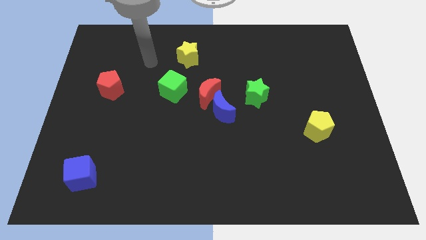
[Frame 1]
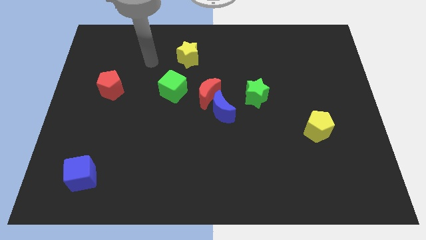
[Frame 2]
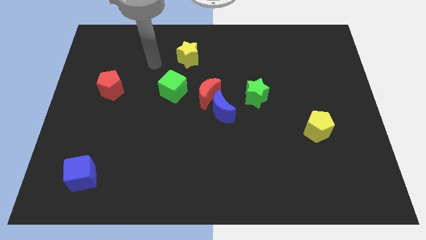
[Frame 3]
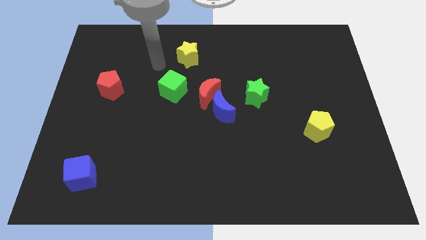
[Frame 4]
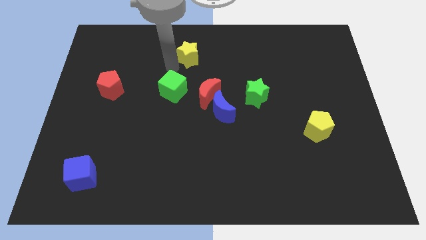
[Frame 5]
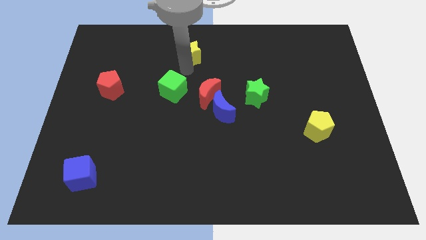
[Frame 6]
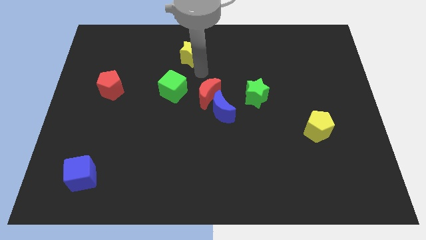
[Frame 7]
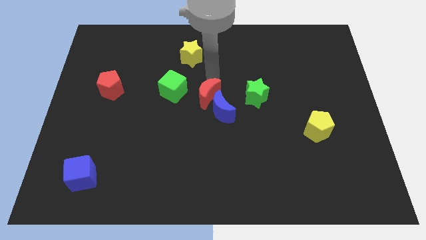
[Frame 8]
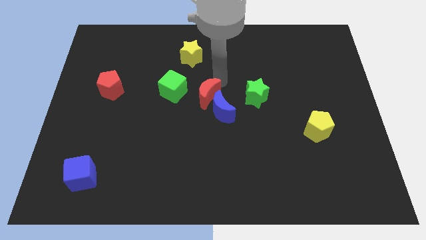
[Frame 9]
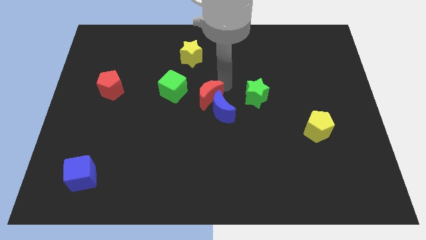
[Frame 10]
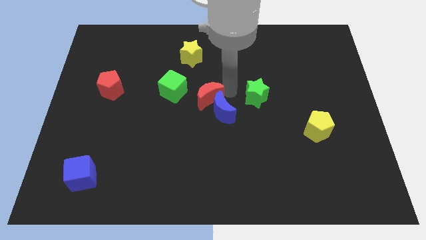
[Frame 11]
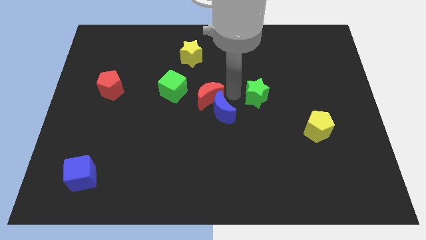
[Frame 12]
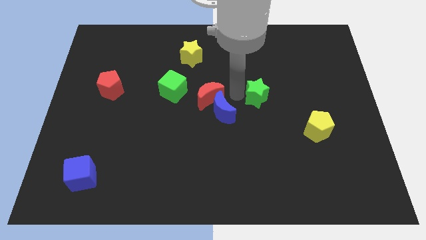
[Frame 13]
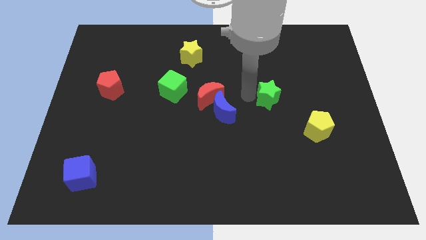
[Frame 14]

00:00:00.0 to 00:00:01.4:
place your arm in between the red moon and green star

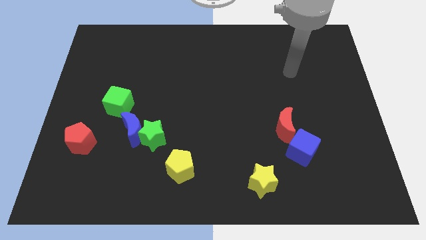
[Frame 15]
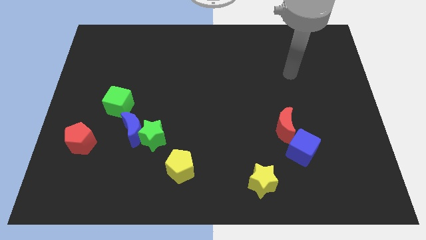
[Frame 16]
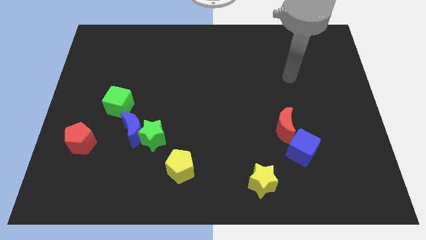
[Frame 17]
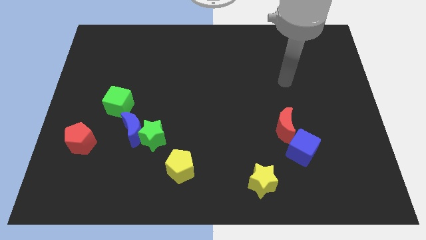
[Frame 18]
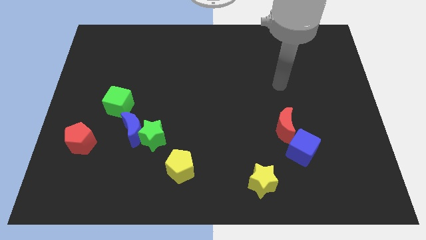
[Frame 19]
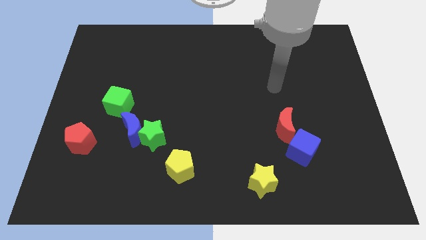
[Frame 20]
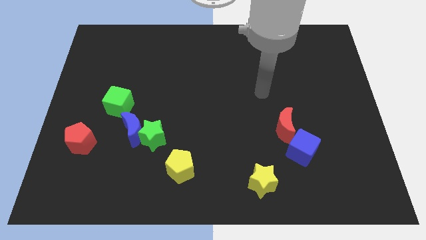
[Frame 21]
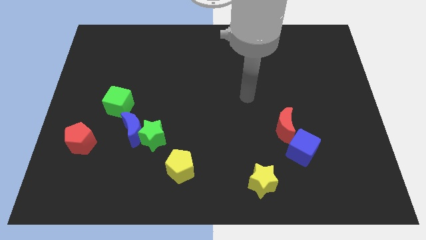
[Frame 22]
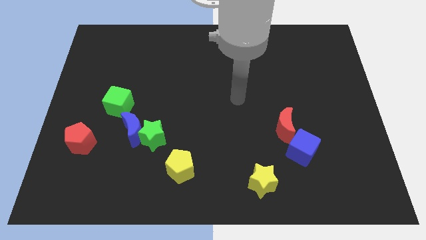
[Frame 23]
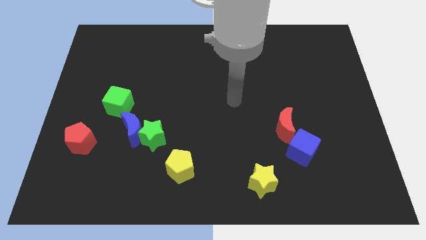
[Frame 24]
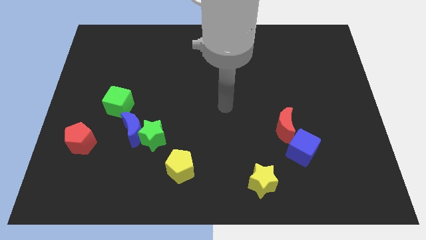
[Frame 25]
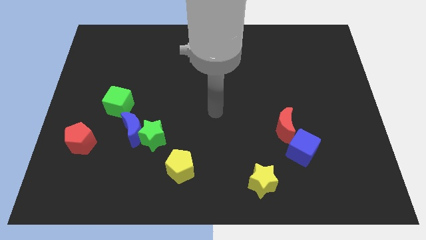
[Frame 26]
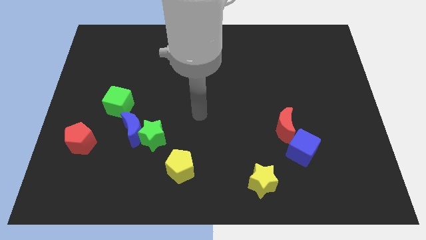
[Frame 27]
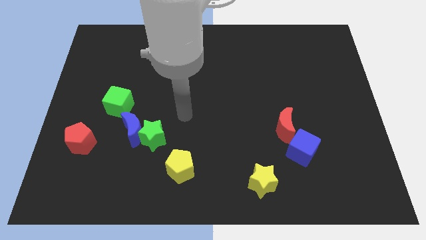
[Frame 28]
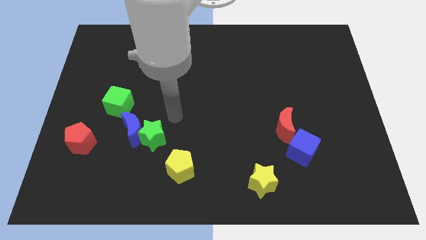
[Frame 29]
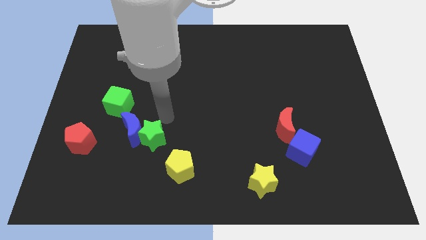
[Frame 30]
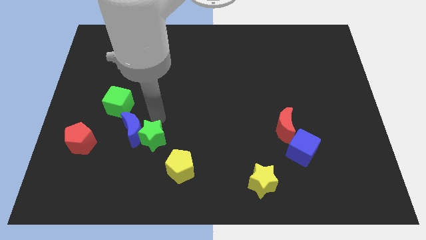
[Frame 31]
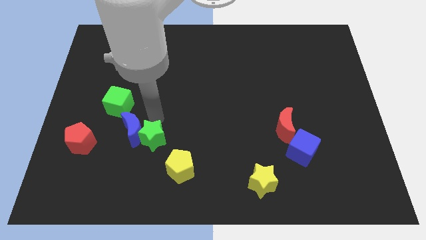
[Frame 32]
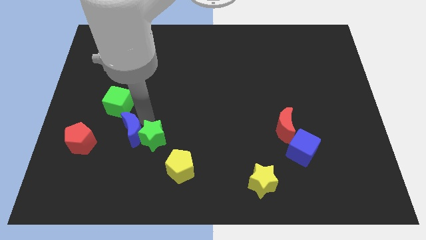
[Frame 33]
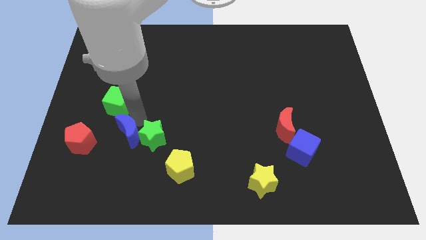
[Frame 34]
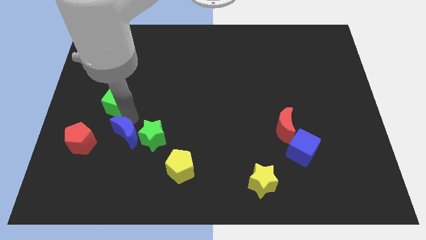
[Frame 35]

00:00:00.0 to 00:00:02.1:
push the blue moon in between the green blocks

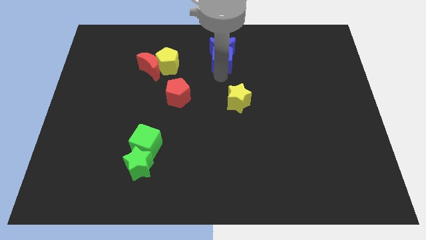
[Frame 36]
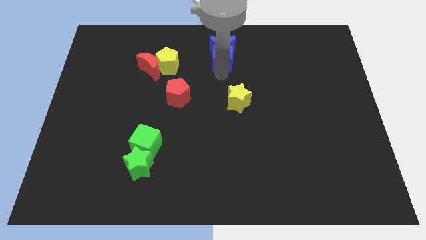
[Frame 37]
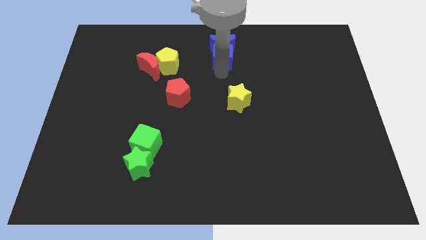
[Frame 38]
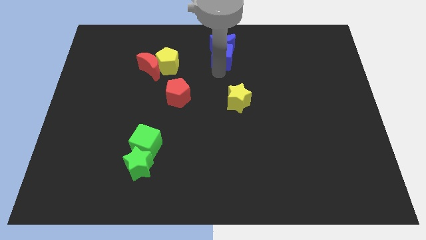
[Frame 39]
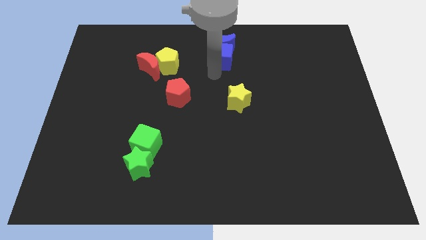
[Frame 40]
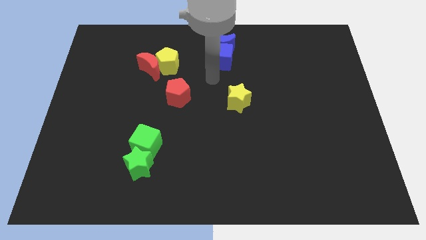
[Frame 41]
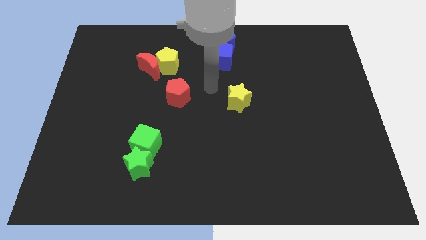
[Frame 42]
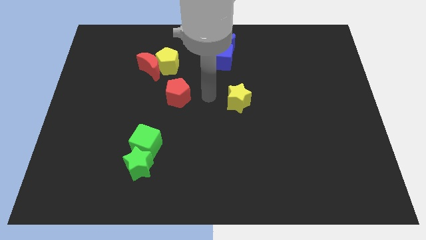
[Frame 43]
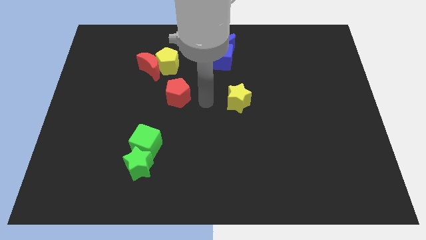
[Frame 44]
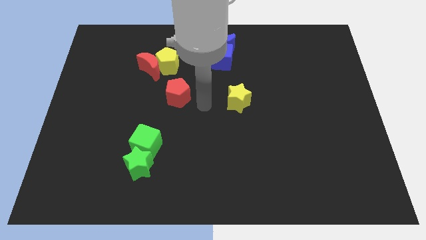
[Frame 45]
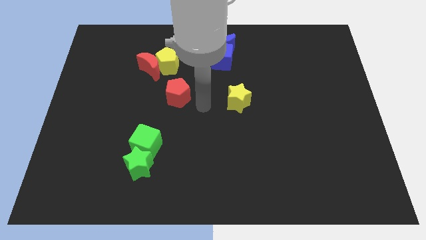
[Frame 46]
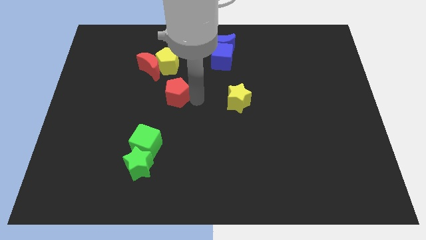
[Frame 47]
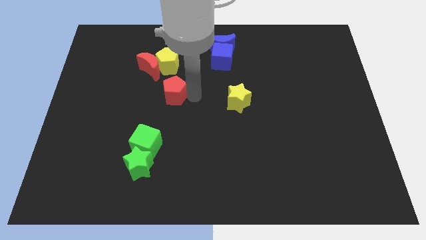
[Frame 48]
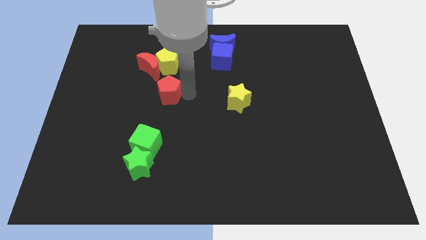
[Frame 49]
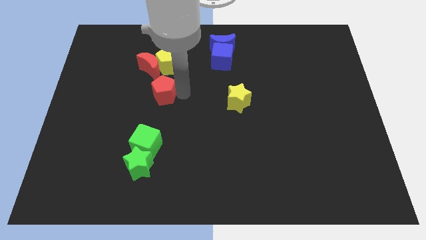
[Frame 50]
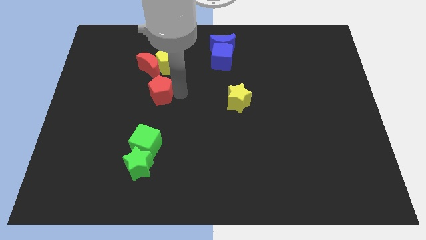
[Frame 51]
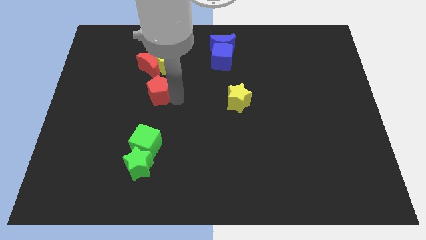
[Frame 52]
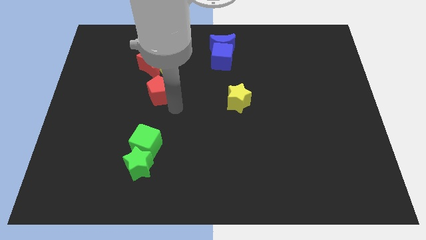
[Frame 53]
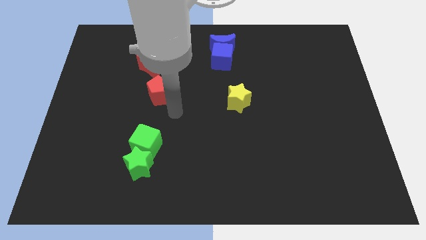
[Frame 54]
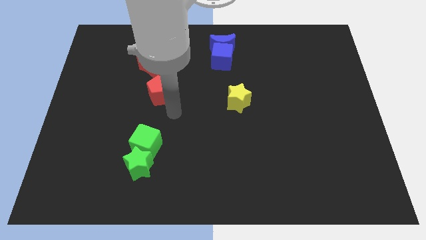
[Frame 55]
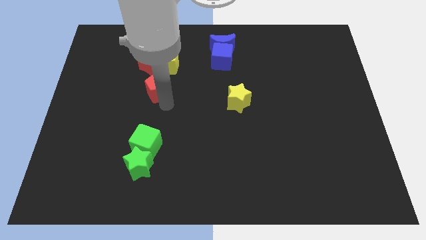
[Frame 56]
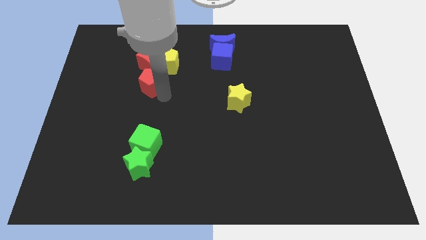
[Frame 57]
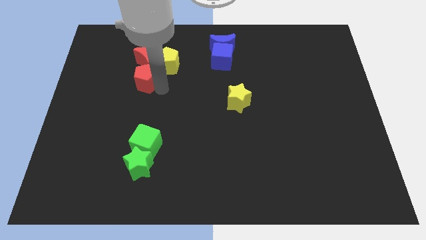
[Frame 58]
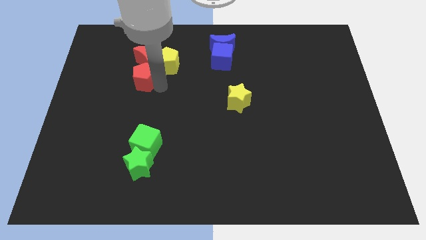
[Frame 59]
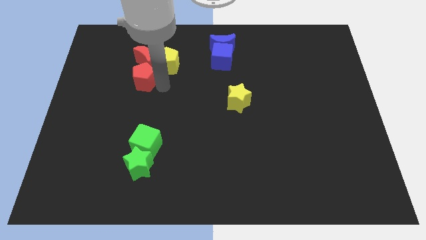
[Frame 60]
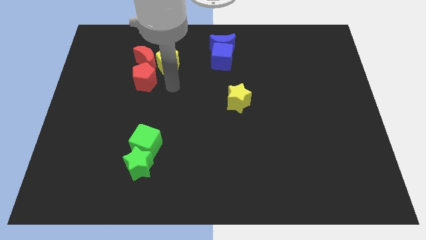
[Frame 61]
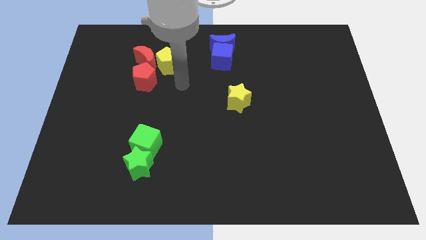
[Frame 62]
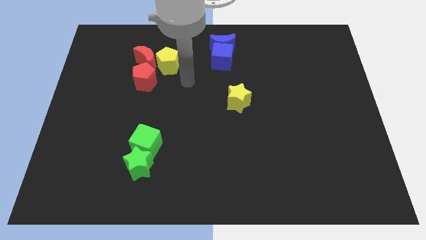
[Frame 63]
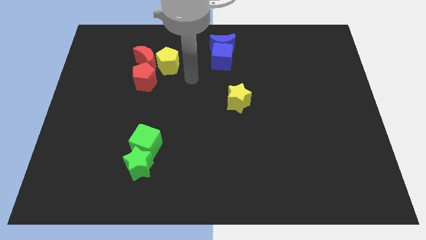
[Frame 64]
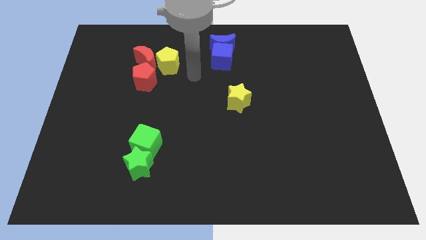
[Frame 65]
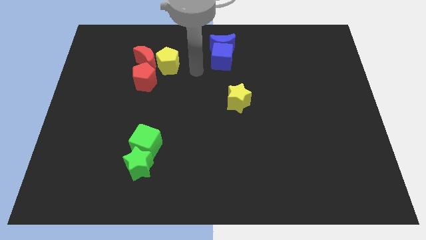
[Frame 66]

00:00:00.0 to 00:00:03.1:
slide the red pentagon to the bottom left of the yellow pentagon

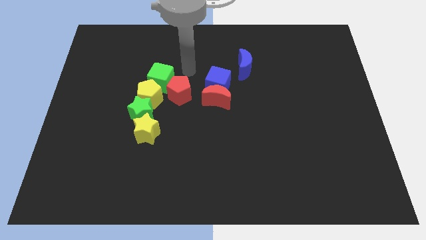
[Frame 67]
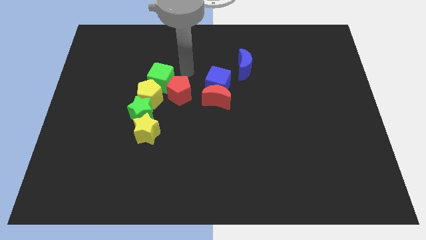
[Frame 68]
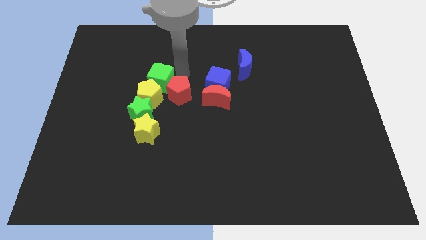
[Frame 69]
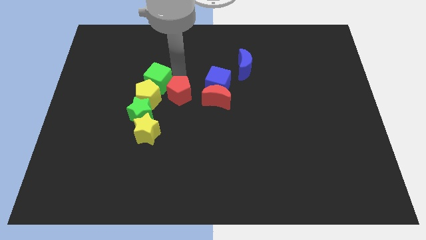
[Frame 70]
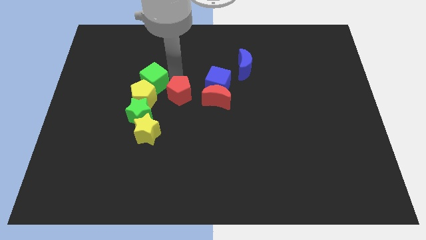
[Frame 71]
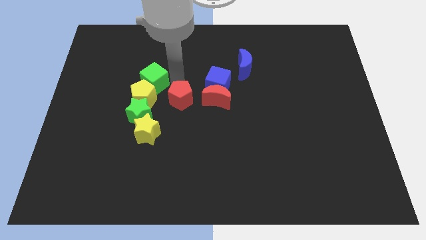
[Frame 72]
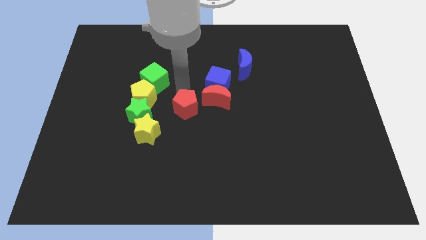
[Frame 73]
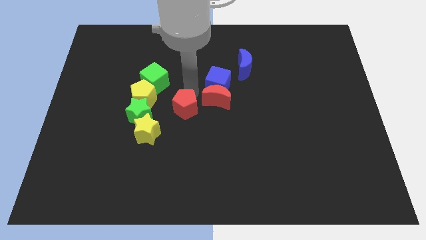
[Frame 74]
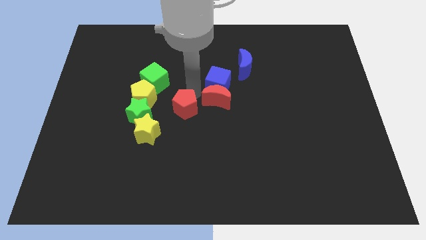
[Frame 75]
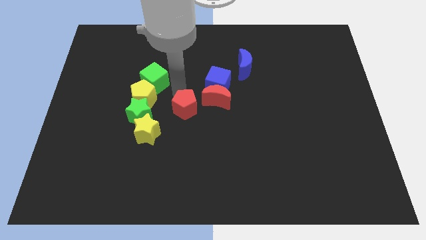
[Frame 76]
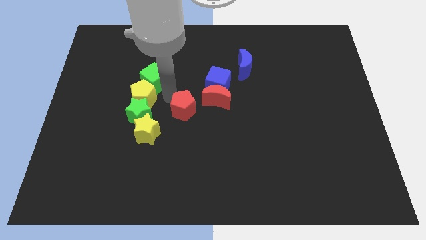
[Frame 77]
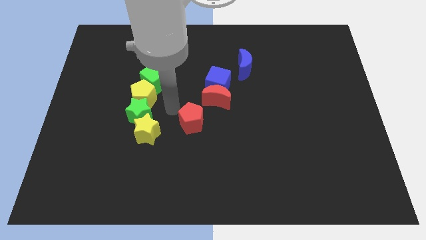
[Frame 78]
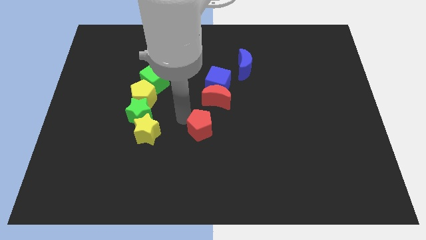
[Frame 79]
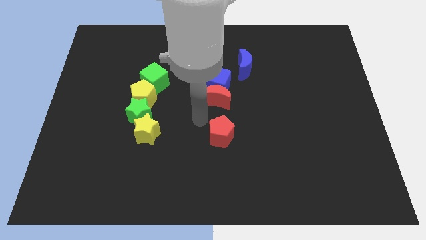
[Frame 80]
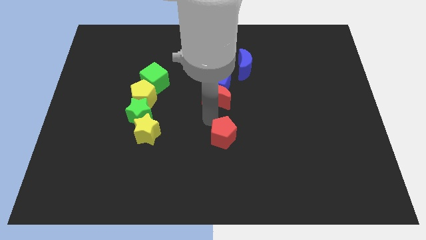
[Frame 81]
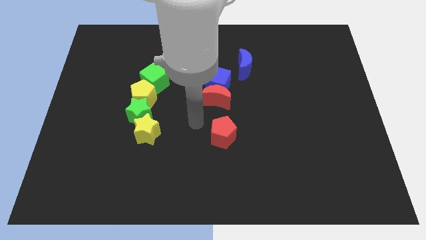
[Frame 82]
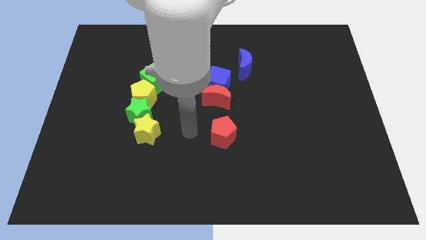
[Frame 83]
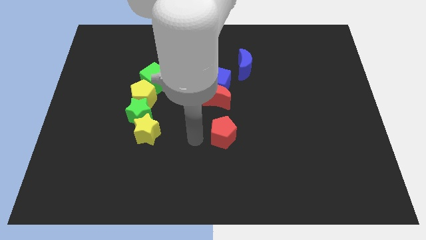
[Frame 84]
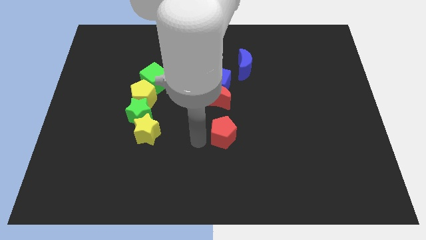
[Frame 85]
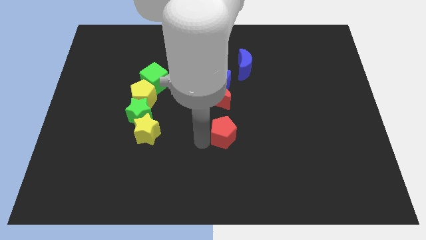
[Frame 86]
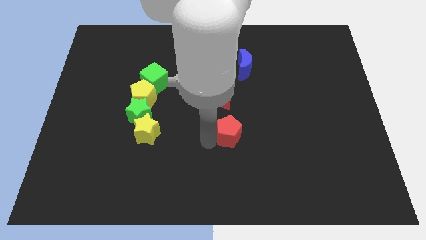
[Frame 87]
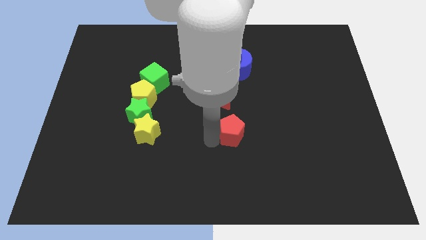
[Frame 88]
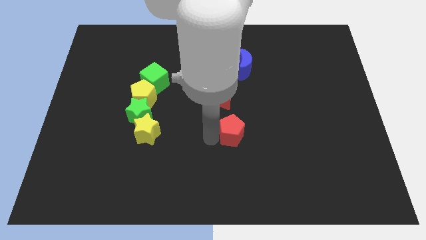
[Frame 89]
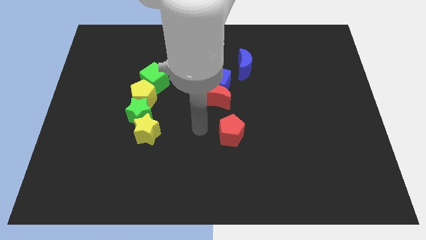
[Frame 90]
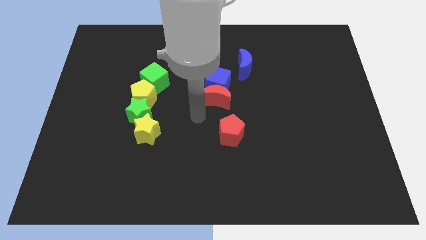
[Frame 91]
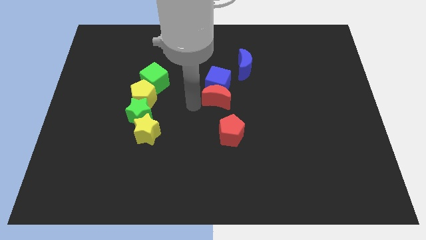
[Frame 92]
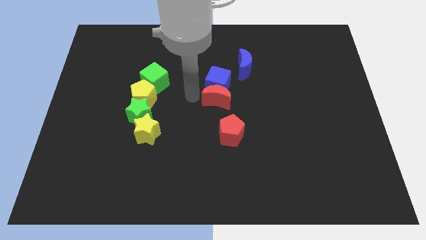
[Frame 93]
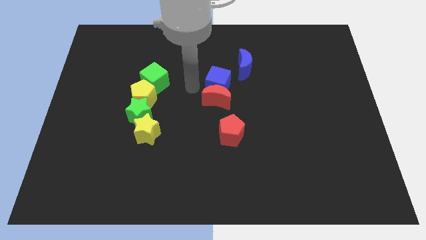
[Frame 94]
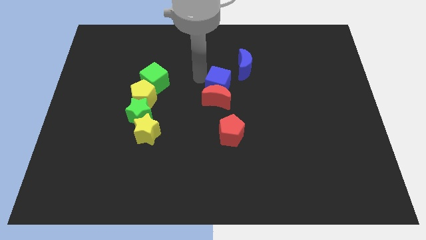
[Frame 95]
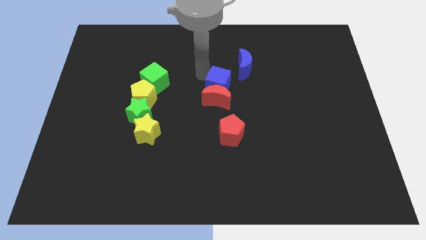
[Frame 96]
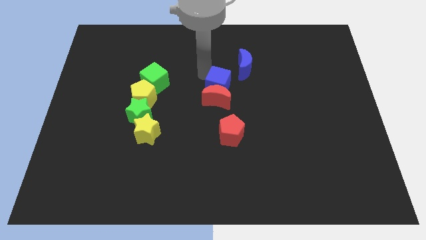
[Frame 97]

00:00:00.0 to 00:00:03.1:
place red pentagon to the right of yellow star
